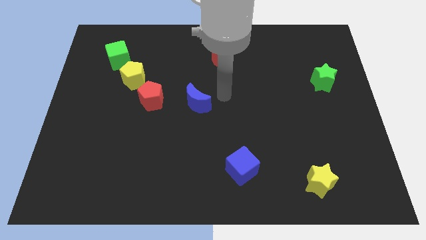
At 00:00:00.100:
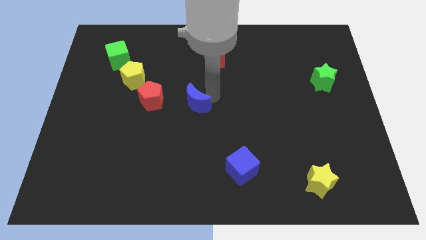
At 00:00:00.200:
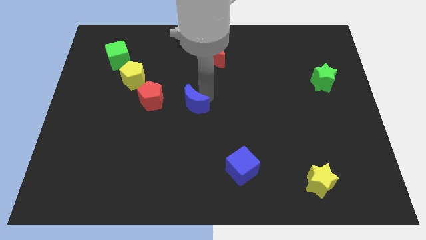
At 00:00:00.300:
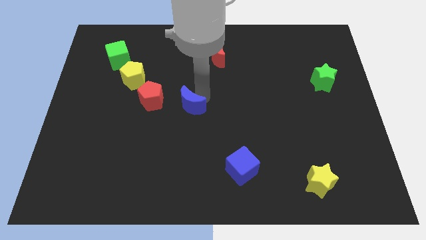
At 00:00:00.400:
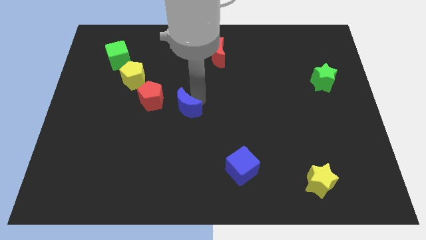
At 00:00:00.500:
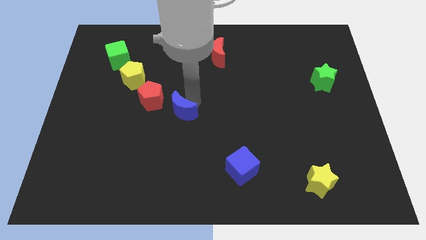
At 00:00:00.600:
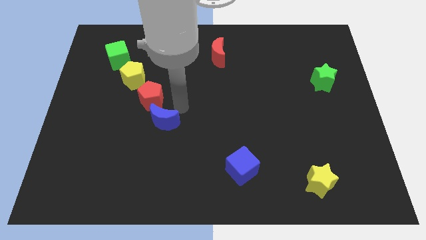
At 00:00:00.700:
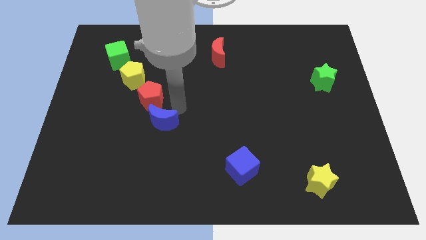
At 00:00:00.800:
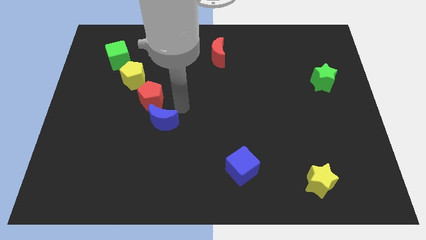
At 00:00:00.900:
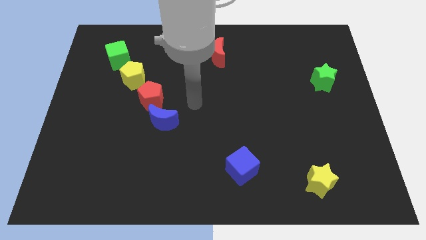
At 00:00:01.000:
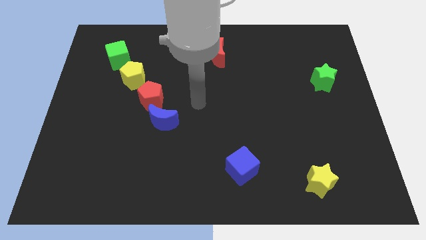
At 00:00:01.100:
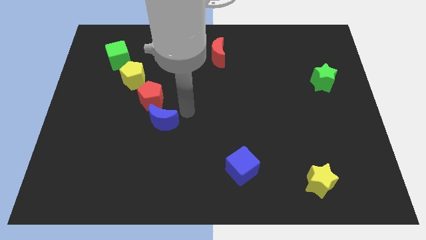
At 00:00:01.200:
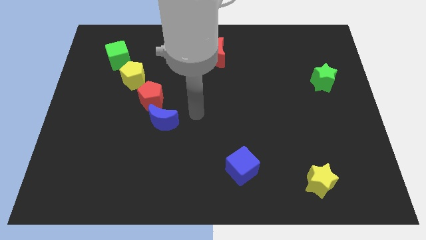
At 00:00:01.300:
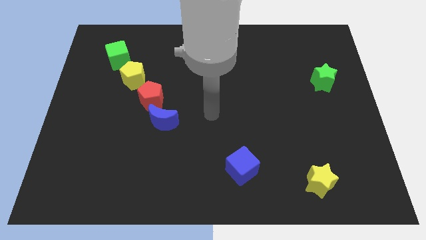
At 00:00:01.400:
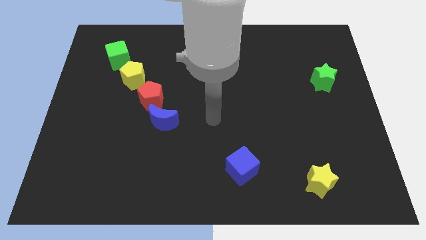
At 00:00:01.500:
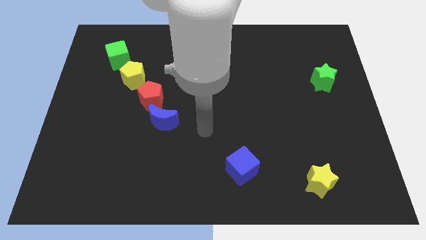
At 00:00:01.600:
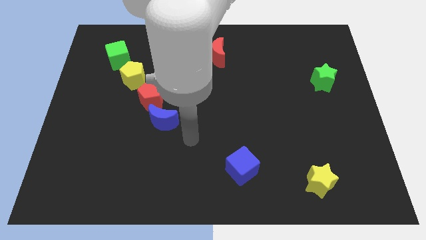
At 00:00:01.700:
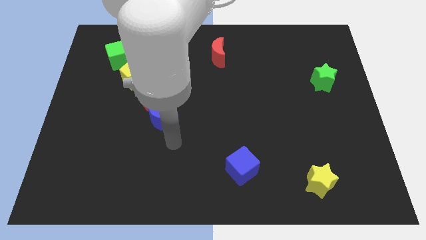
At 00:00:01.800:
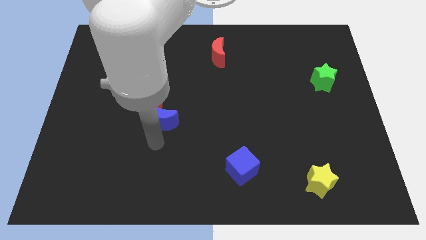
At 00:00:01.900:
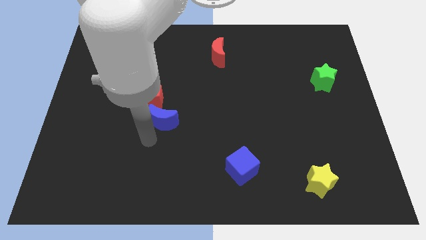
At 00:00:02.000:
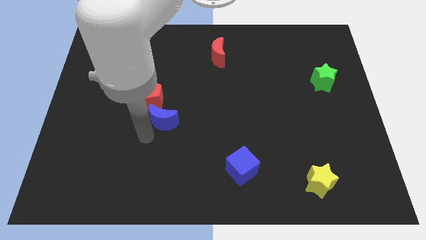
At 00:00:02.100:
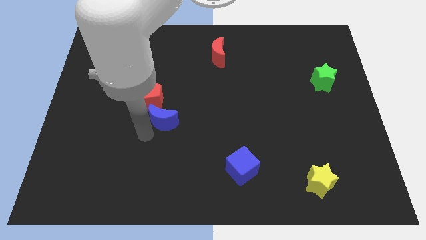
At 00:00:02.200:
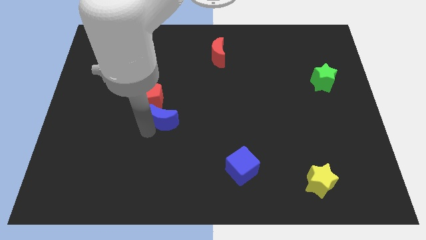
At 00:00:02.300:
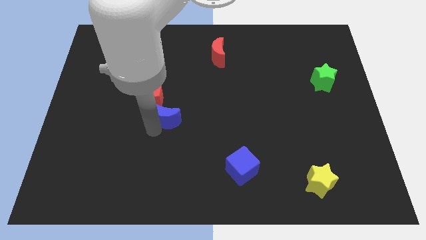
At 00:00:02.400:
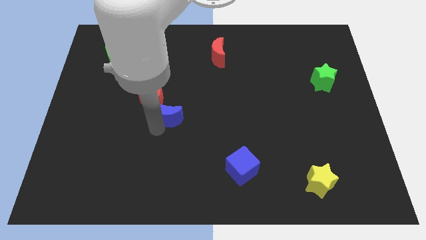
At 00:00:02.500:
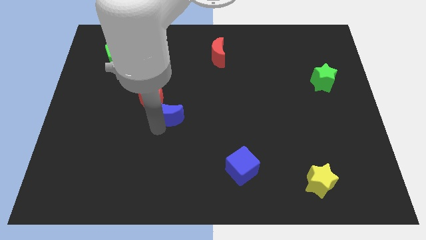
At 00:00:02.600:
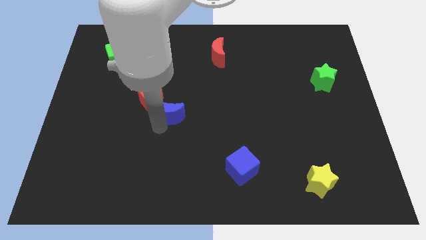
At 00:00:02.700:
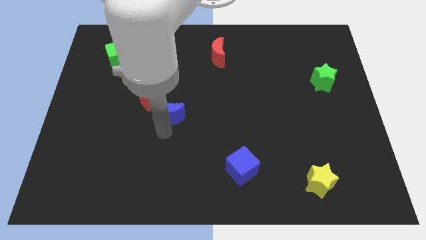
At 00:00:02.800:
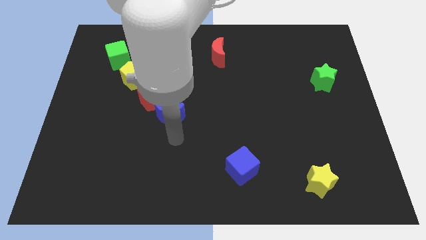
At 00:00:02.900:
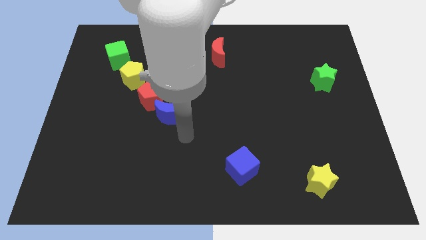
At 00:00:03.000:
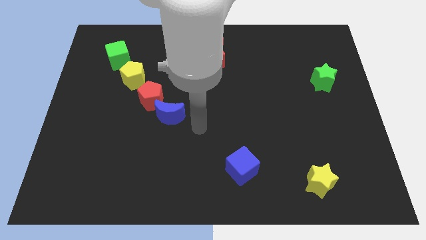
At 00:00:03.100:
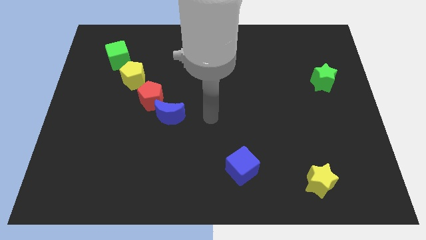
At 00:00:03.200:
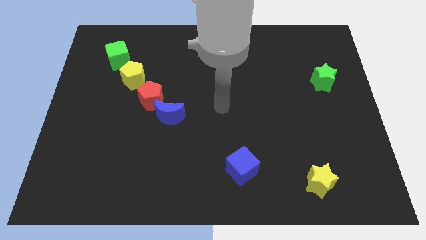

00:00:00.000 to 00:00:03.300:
place the blue crescent to the bottom of red pentagon

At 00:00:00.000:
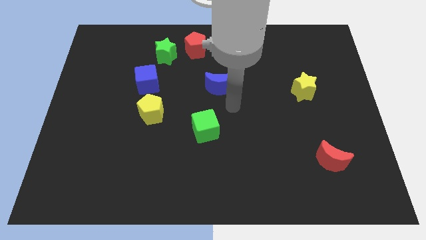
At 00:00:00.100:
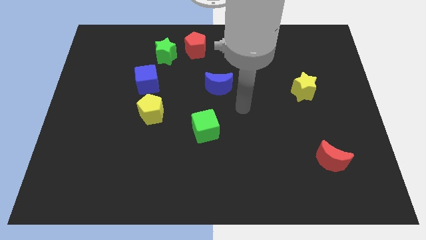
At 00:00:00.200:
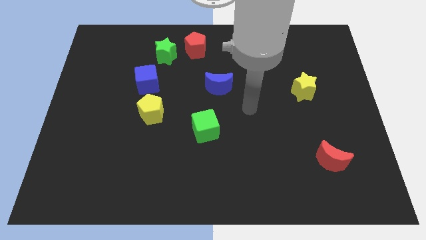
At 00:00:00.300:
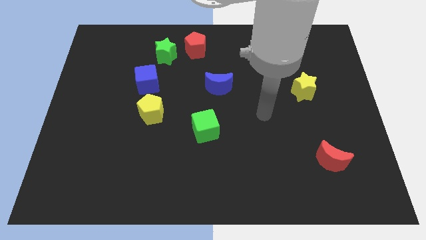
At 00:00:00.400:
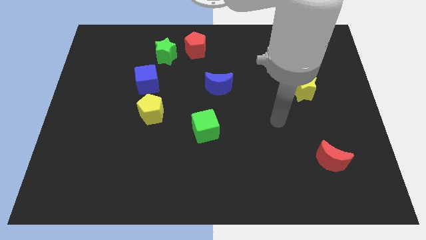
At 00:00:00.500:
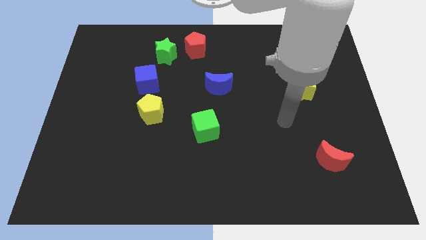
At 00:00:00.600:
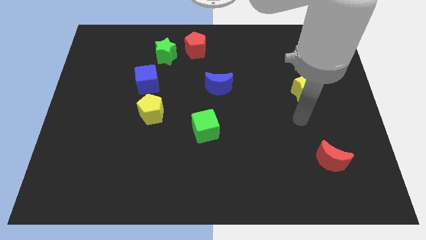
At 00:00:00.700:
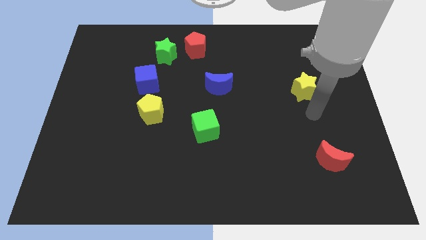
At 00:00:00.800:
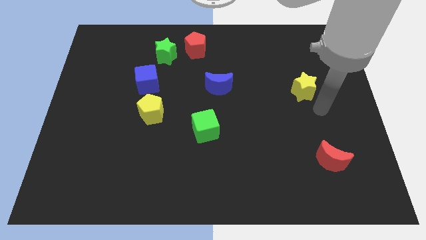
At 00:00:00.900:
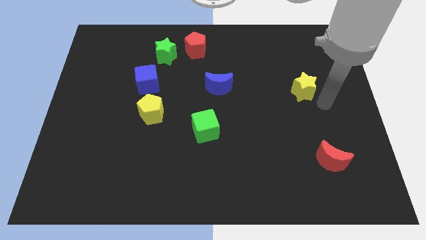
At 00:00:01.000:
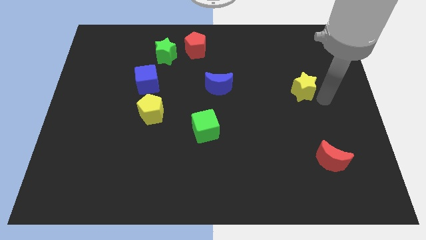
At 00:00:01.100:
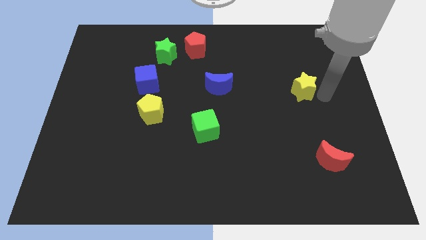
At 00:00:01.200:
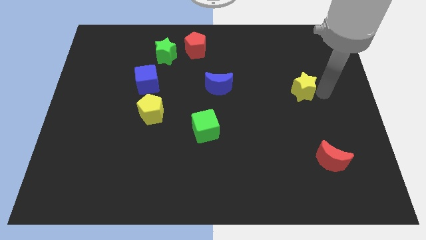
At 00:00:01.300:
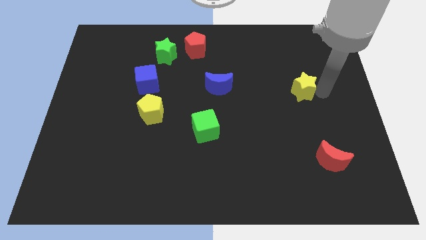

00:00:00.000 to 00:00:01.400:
push your arm near yellow star

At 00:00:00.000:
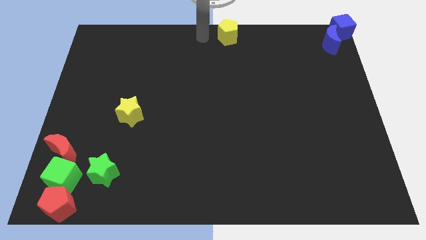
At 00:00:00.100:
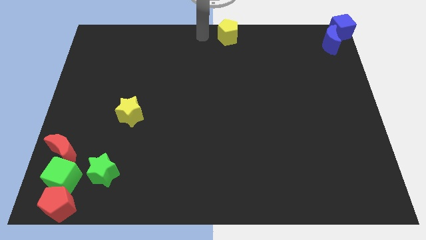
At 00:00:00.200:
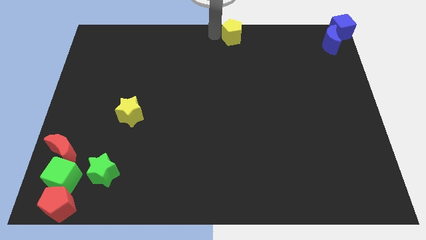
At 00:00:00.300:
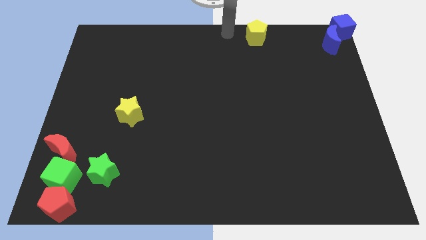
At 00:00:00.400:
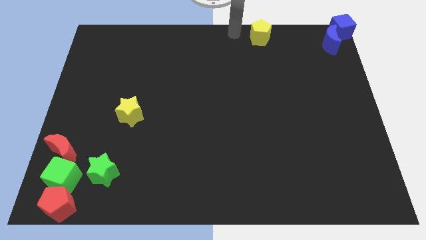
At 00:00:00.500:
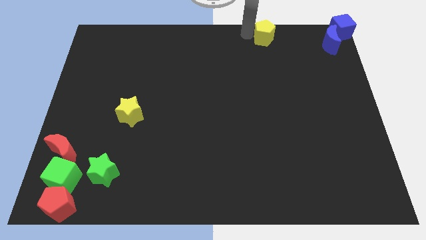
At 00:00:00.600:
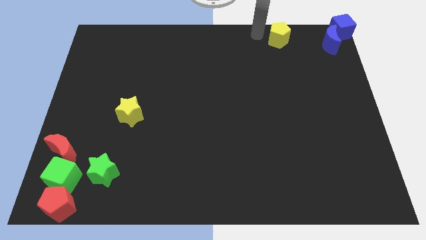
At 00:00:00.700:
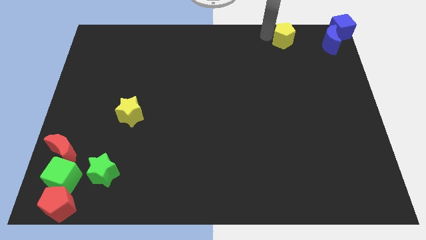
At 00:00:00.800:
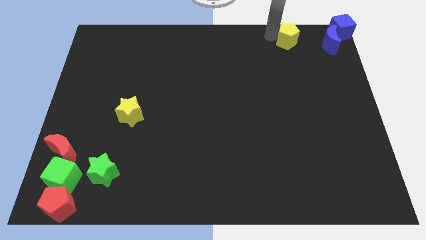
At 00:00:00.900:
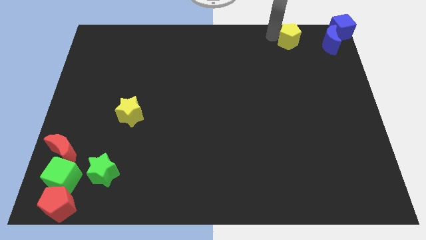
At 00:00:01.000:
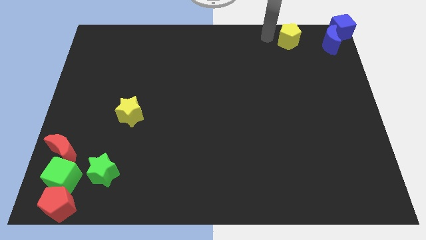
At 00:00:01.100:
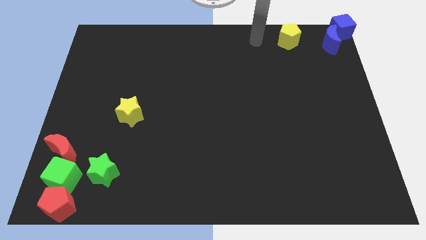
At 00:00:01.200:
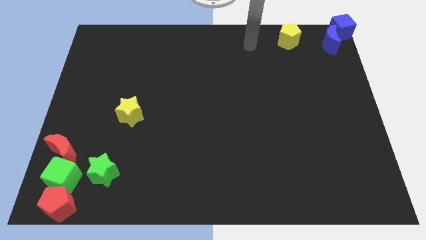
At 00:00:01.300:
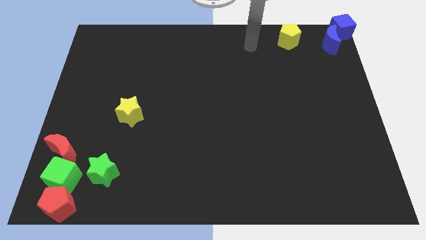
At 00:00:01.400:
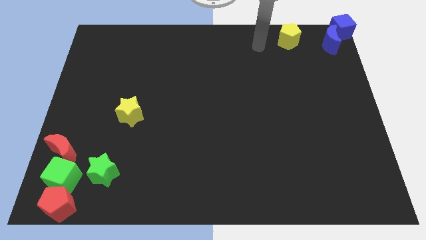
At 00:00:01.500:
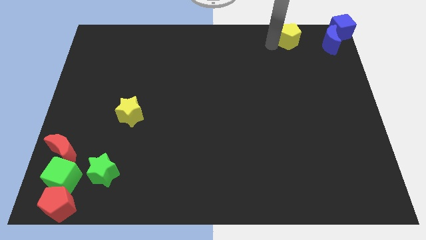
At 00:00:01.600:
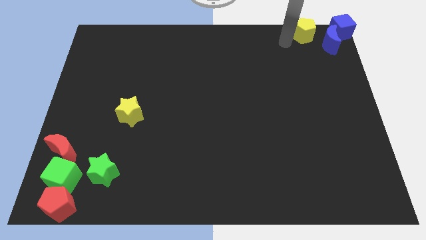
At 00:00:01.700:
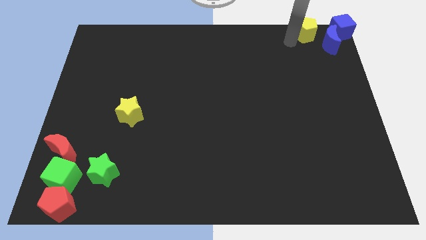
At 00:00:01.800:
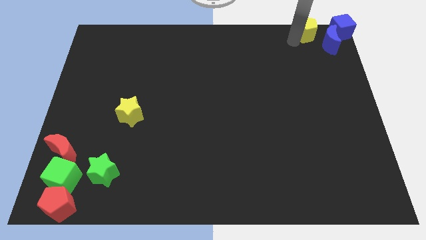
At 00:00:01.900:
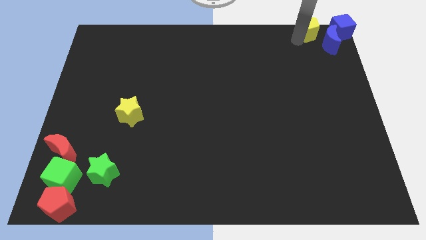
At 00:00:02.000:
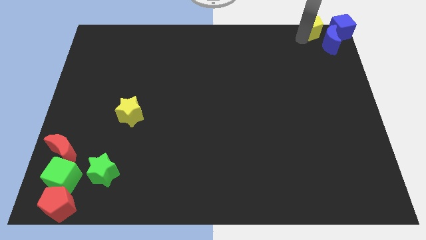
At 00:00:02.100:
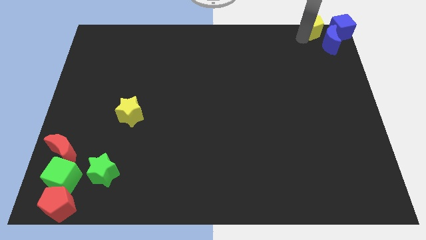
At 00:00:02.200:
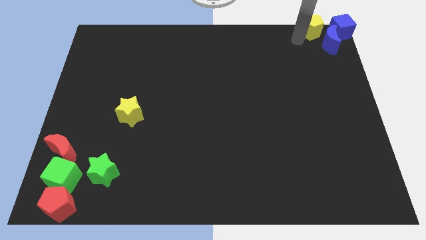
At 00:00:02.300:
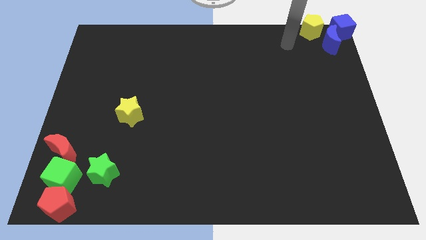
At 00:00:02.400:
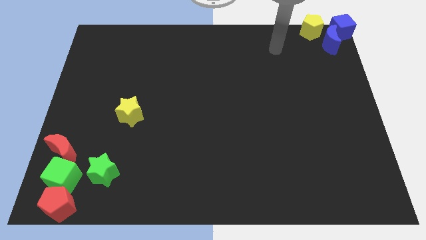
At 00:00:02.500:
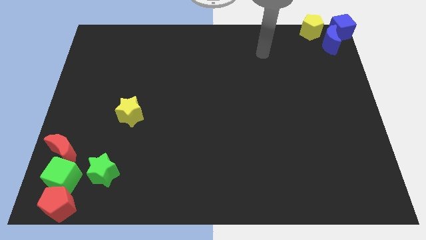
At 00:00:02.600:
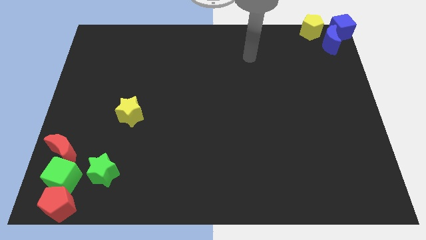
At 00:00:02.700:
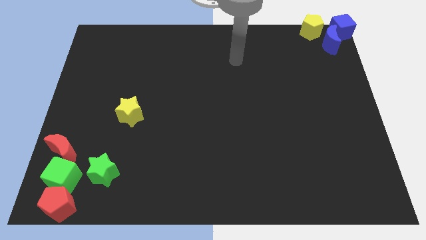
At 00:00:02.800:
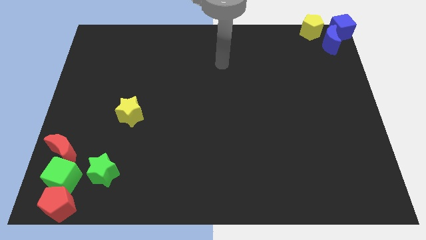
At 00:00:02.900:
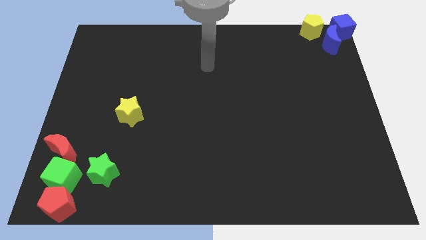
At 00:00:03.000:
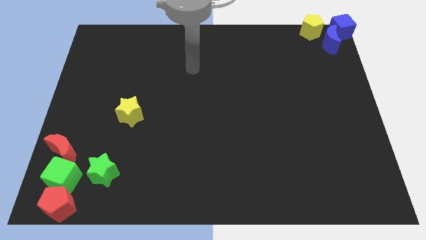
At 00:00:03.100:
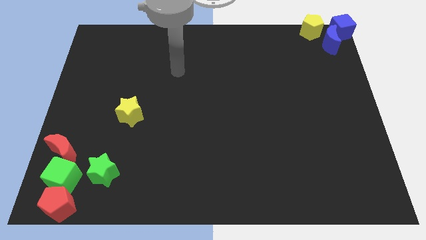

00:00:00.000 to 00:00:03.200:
push yellow pentagon to the left side of the blue cube

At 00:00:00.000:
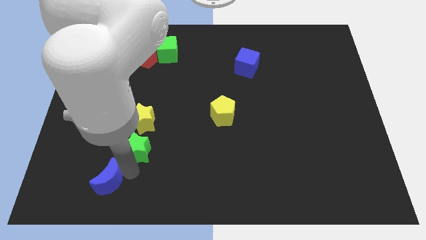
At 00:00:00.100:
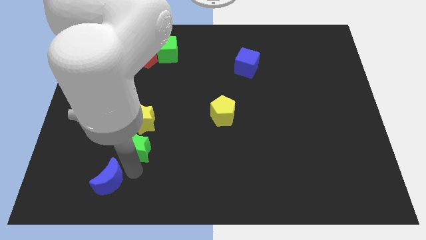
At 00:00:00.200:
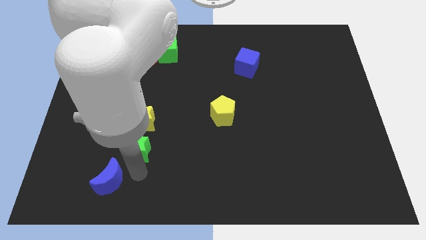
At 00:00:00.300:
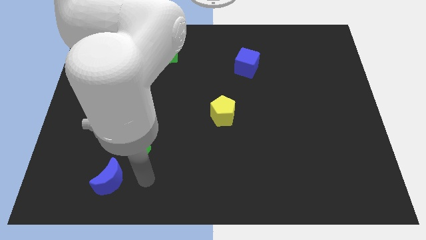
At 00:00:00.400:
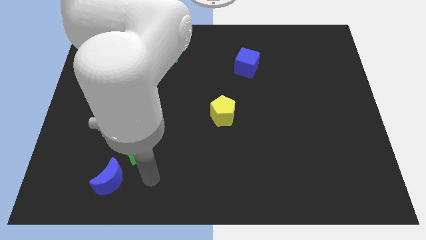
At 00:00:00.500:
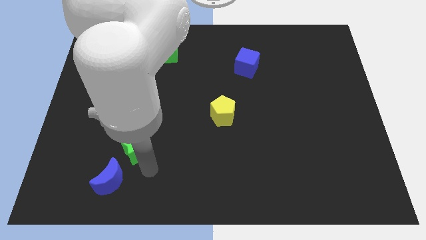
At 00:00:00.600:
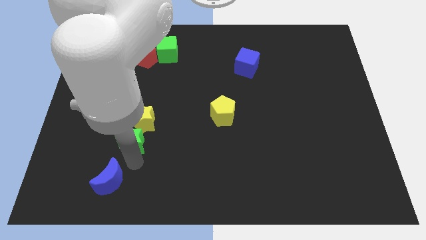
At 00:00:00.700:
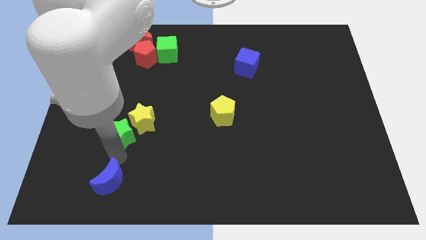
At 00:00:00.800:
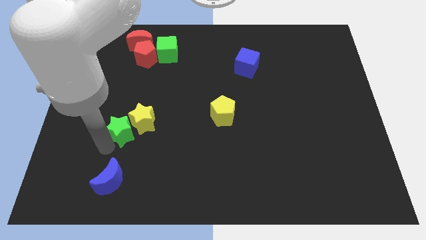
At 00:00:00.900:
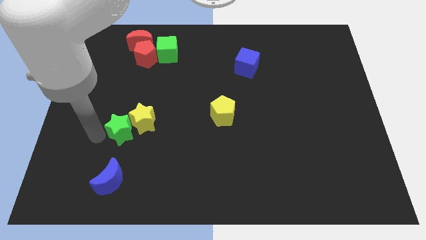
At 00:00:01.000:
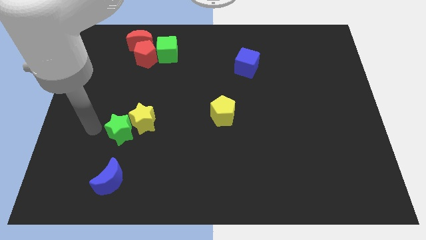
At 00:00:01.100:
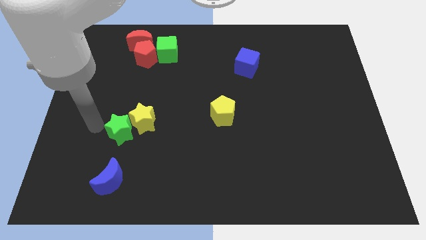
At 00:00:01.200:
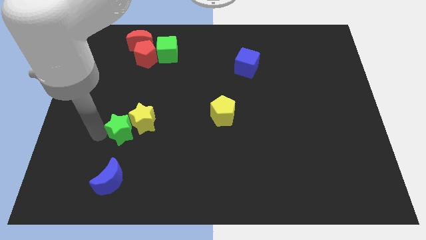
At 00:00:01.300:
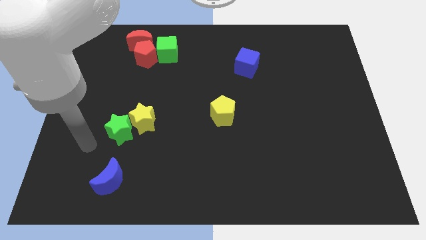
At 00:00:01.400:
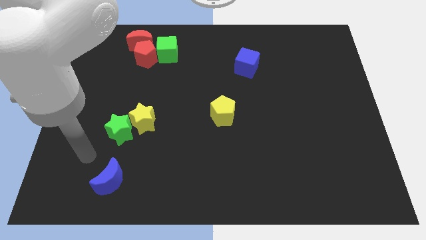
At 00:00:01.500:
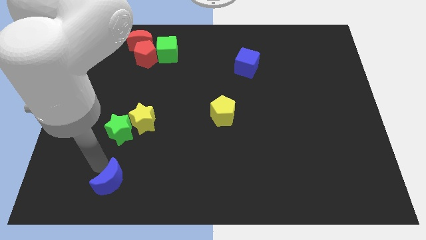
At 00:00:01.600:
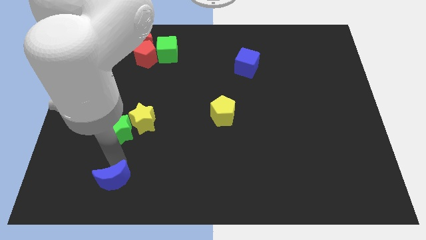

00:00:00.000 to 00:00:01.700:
separate blue moon and green star
